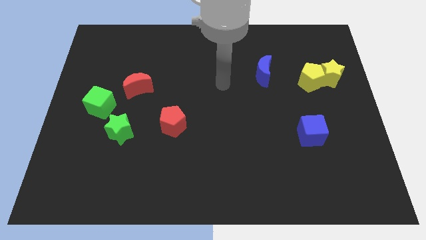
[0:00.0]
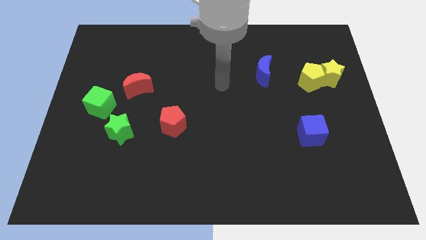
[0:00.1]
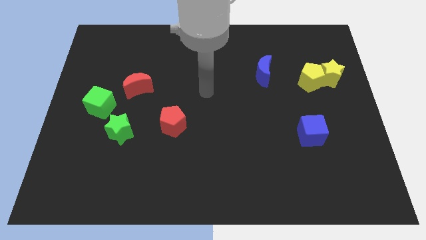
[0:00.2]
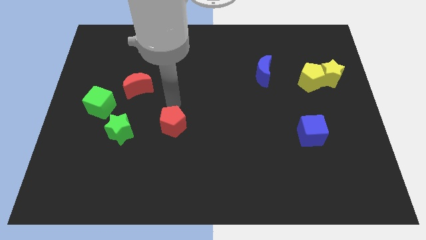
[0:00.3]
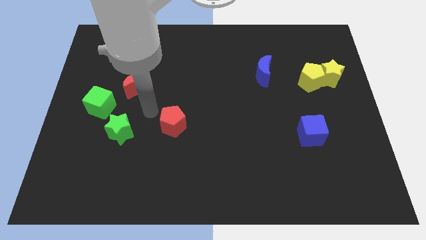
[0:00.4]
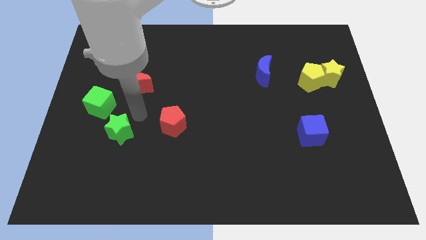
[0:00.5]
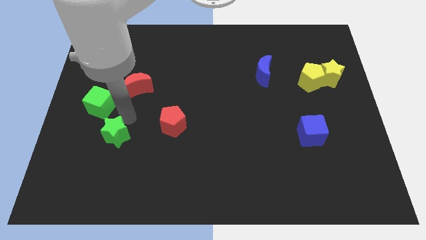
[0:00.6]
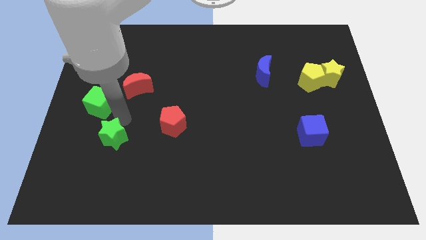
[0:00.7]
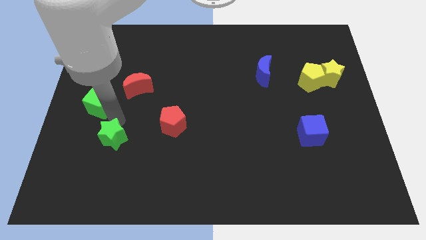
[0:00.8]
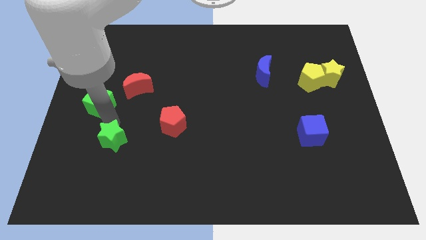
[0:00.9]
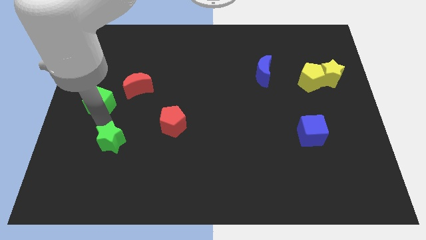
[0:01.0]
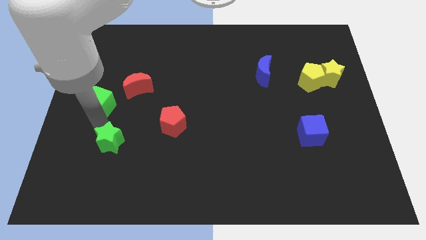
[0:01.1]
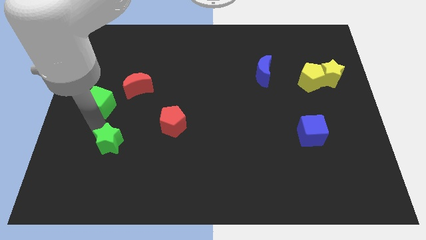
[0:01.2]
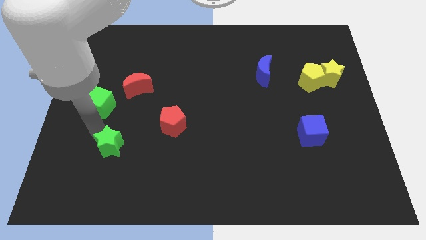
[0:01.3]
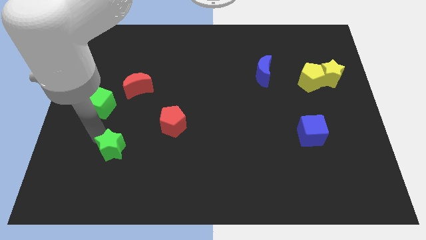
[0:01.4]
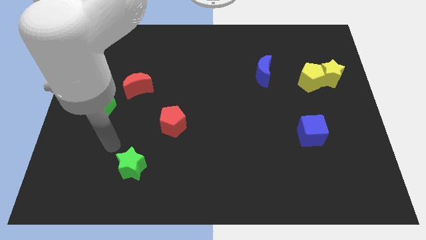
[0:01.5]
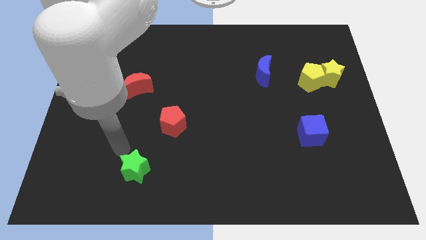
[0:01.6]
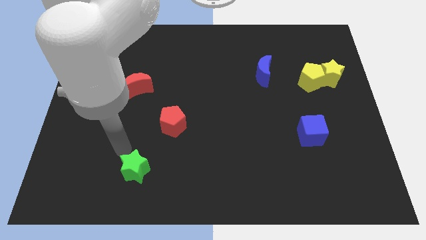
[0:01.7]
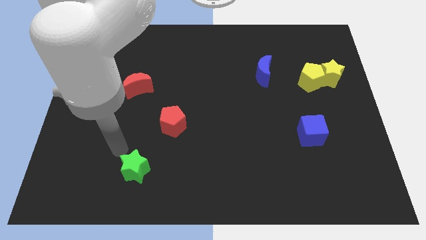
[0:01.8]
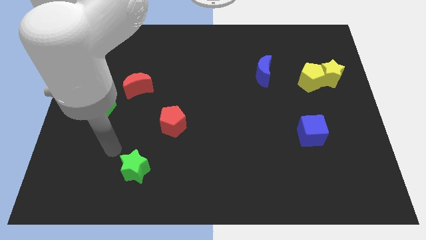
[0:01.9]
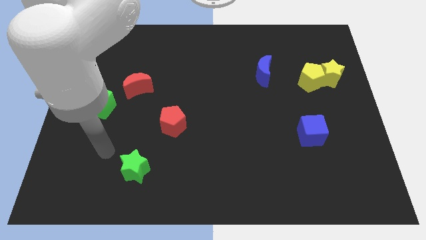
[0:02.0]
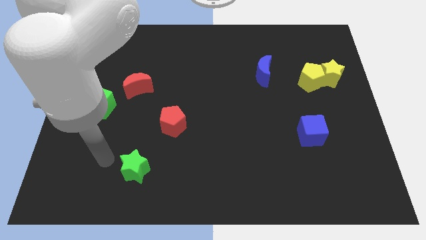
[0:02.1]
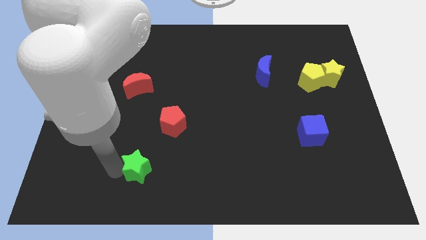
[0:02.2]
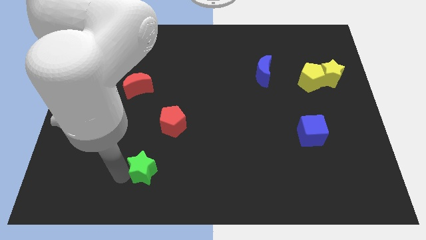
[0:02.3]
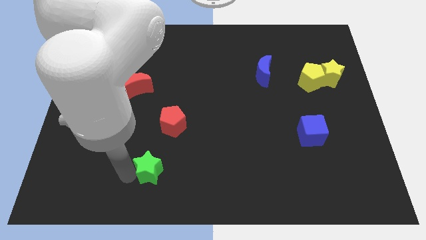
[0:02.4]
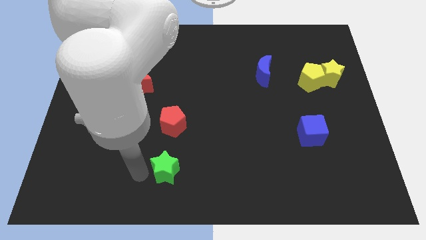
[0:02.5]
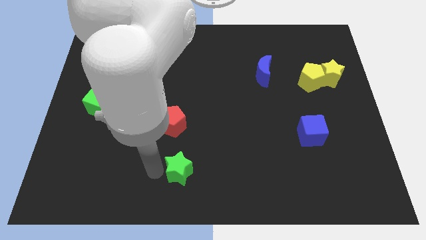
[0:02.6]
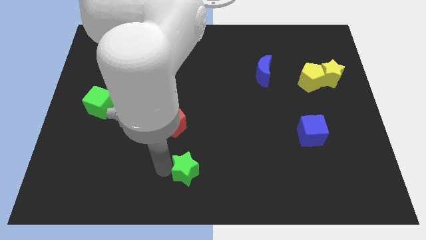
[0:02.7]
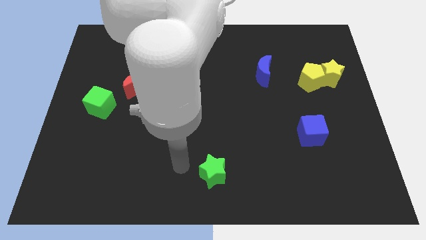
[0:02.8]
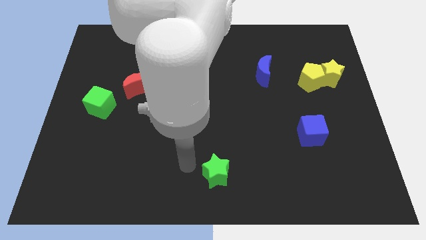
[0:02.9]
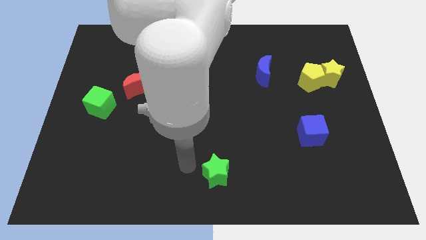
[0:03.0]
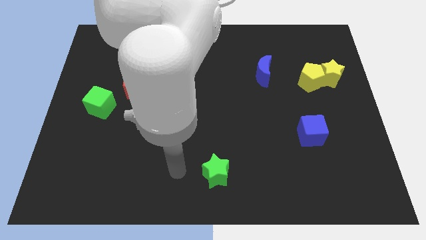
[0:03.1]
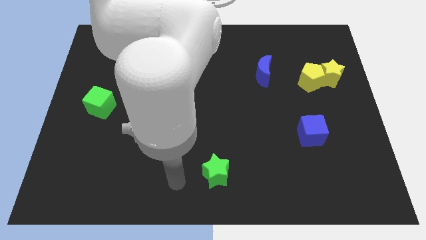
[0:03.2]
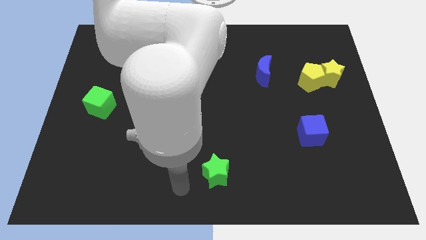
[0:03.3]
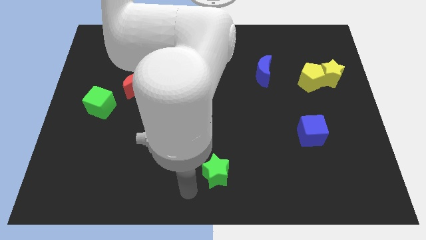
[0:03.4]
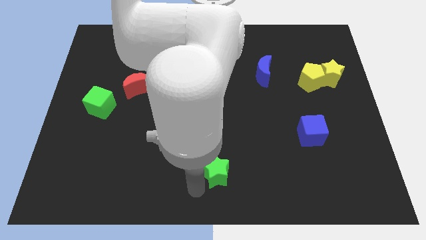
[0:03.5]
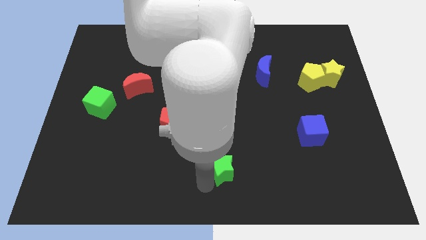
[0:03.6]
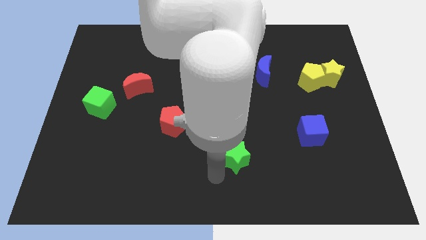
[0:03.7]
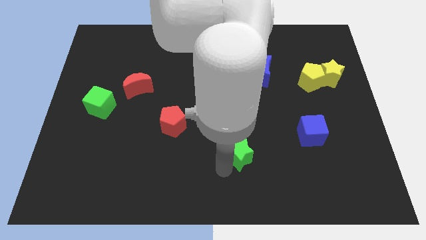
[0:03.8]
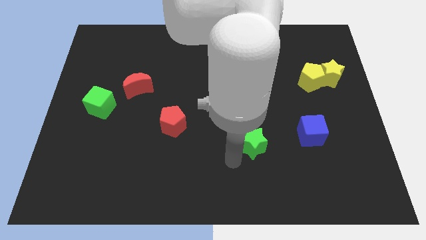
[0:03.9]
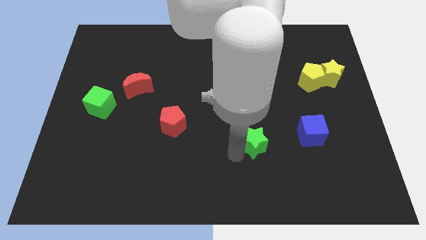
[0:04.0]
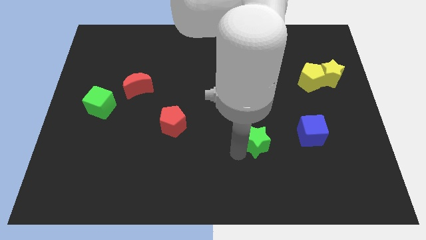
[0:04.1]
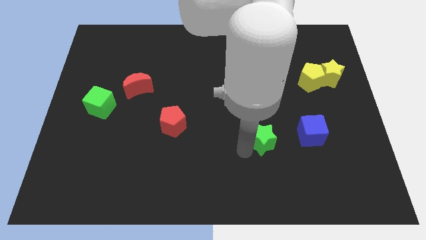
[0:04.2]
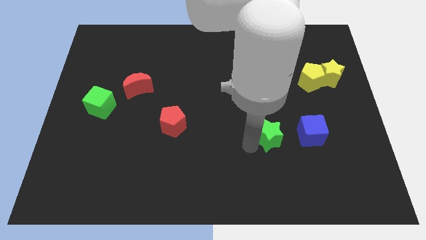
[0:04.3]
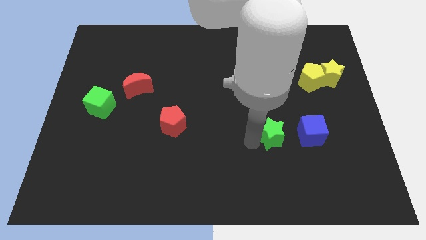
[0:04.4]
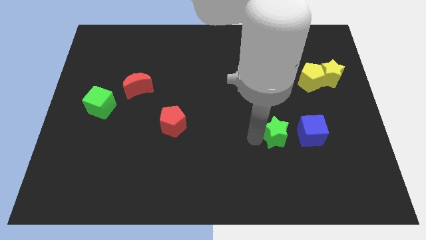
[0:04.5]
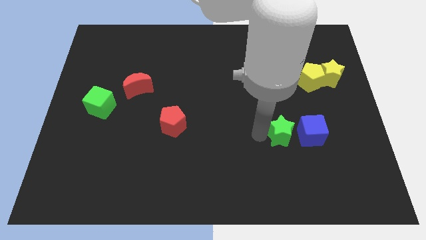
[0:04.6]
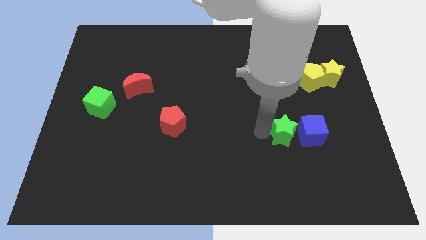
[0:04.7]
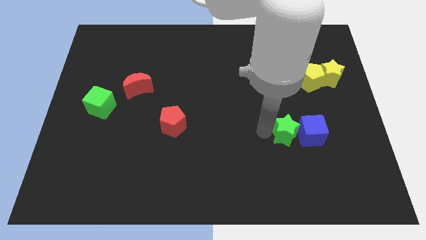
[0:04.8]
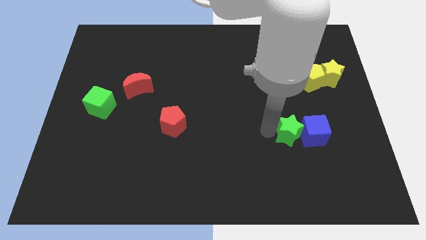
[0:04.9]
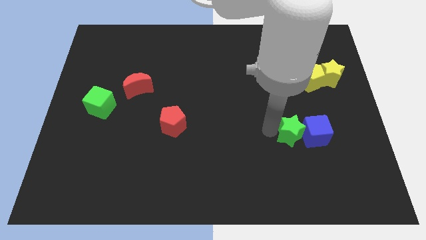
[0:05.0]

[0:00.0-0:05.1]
move the green star towards the blue cube

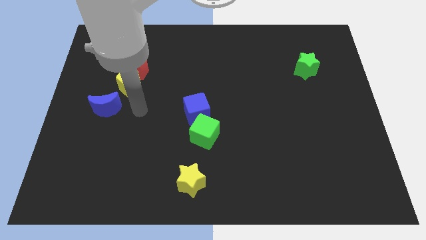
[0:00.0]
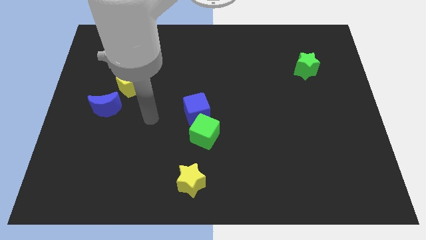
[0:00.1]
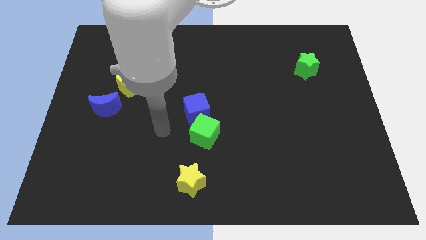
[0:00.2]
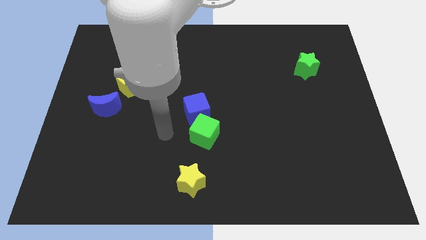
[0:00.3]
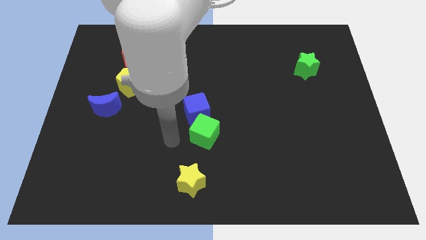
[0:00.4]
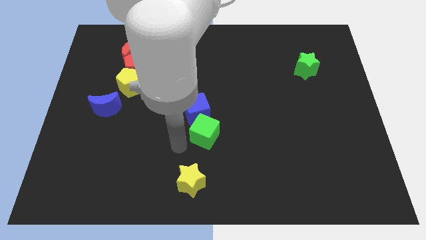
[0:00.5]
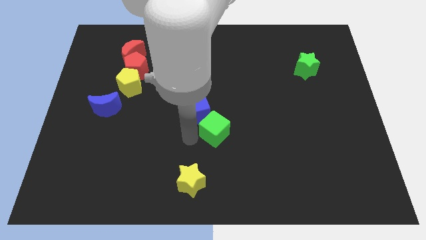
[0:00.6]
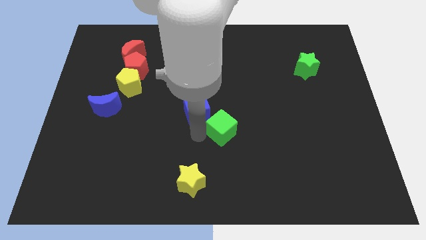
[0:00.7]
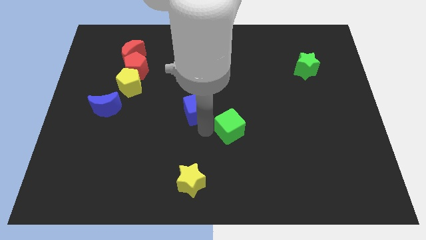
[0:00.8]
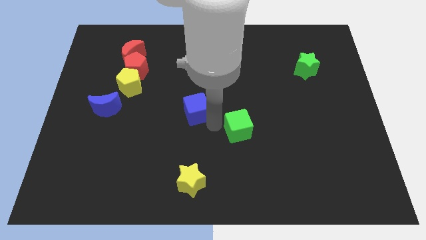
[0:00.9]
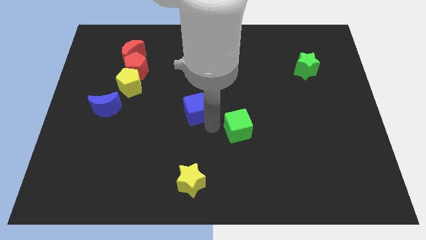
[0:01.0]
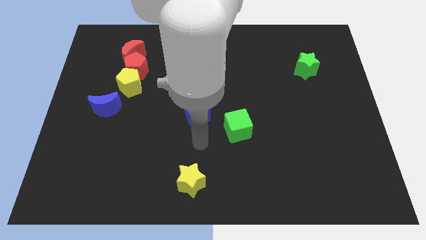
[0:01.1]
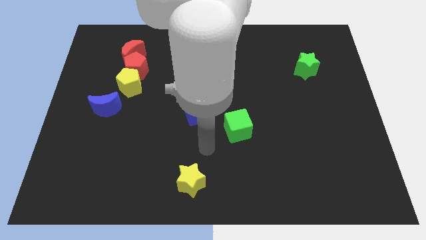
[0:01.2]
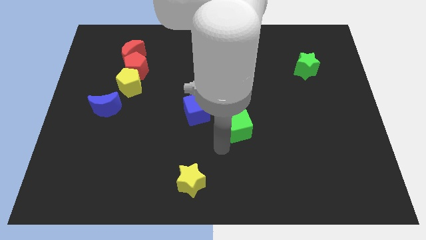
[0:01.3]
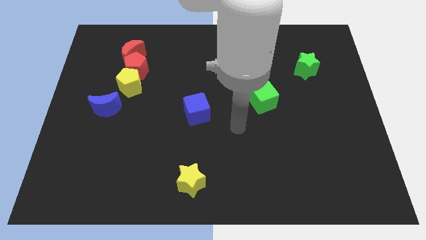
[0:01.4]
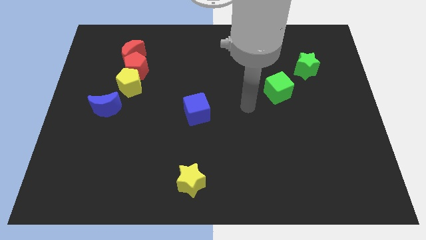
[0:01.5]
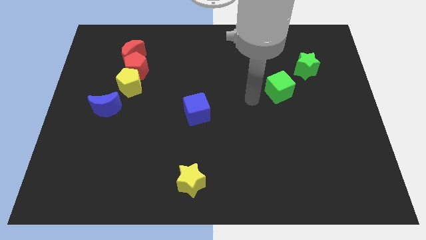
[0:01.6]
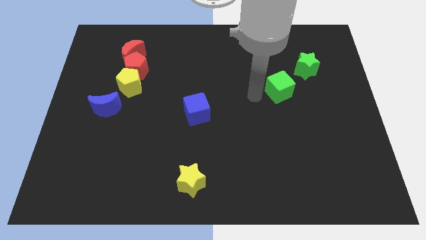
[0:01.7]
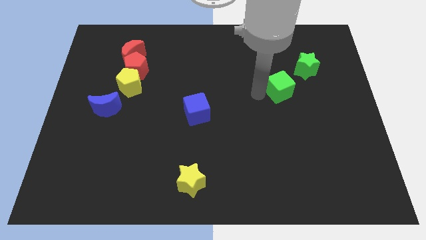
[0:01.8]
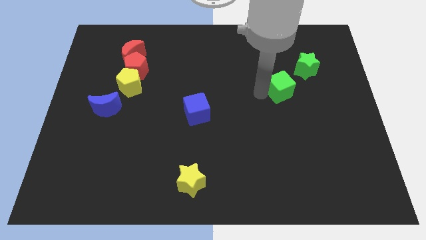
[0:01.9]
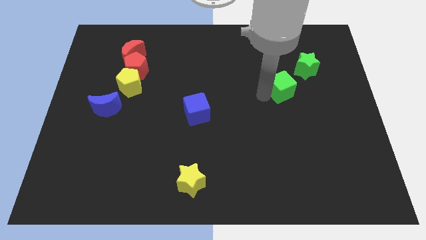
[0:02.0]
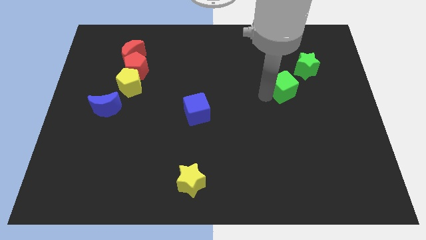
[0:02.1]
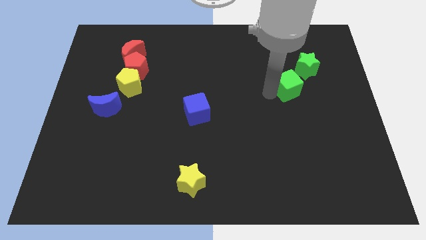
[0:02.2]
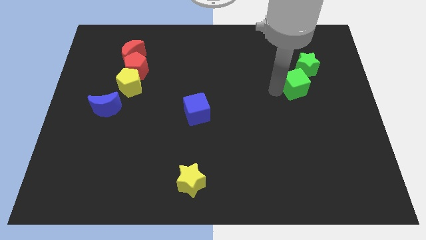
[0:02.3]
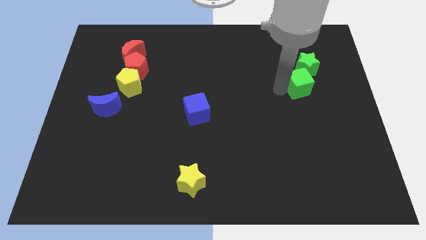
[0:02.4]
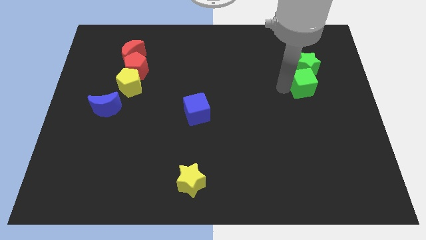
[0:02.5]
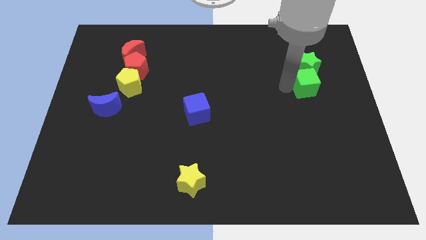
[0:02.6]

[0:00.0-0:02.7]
put the green cube to the green star

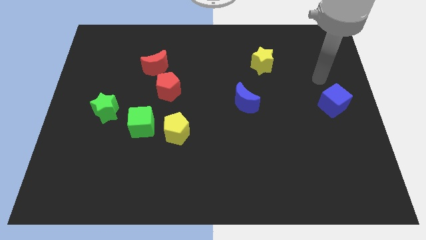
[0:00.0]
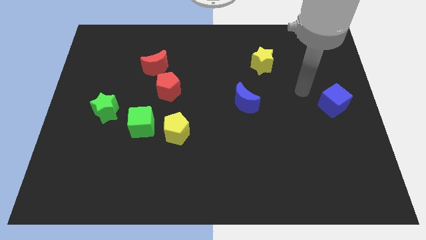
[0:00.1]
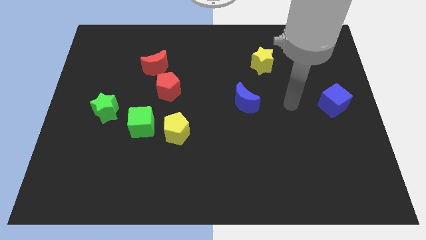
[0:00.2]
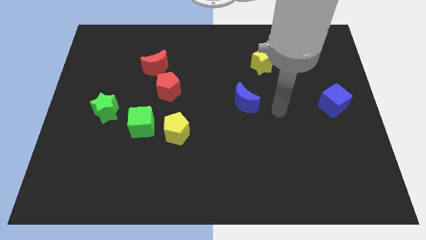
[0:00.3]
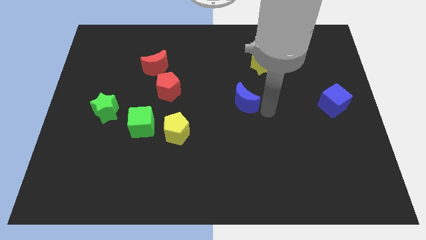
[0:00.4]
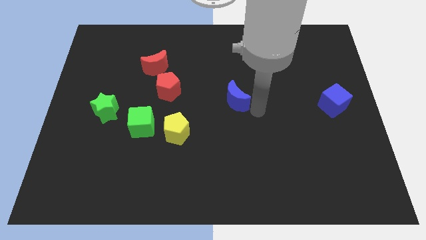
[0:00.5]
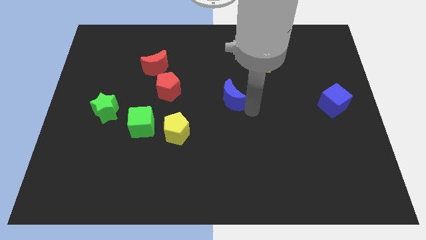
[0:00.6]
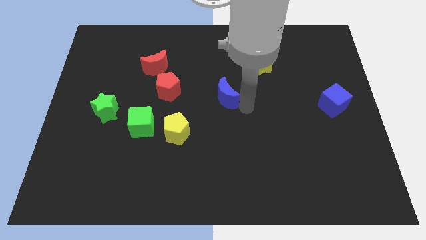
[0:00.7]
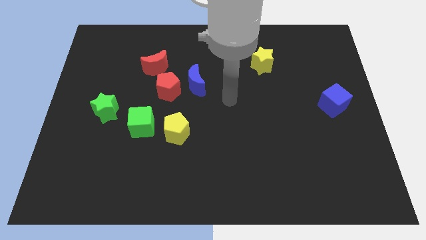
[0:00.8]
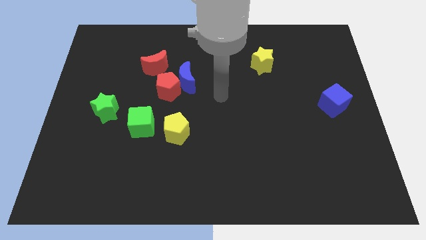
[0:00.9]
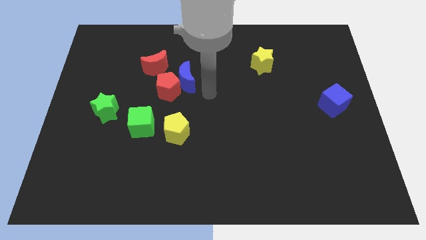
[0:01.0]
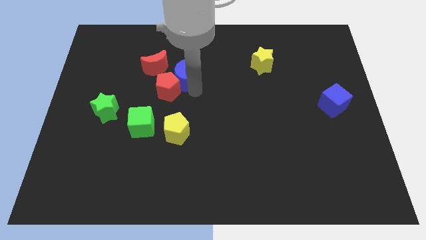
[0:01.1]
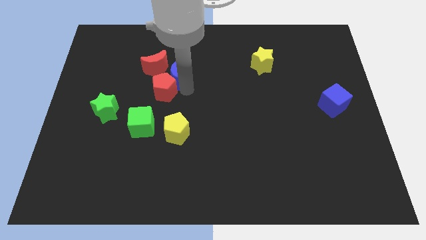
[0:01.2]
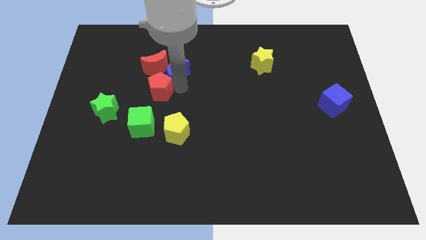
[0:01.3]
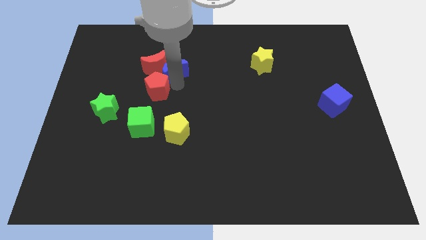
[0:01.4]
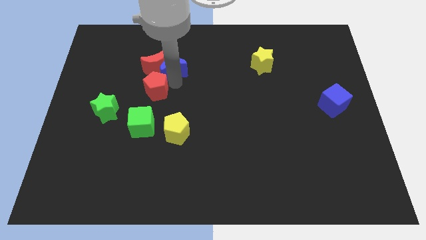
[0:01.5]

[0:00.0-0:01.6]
move the blue moon close to the red moon
